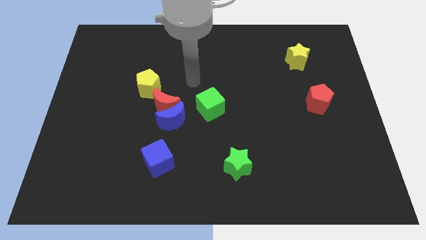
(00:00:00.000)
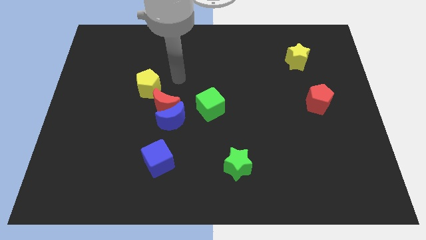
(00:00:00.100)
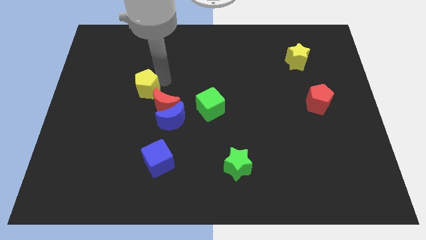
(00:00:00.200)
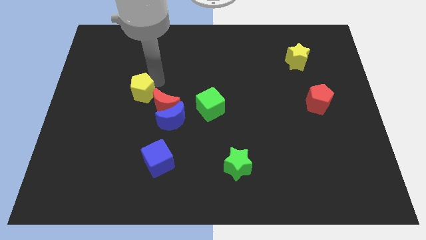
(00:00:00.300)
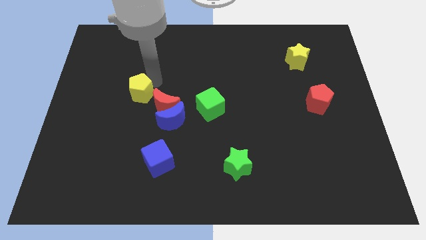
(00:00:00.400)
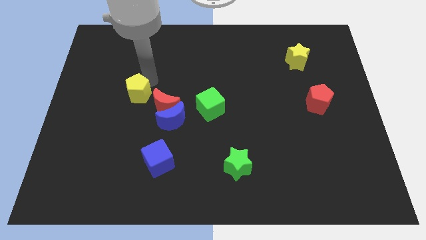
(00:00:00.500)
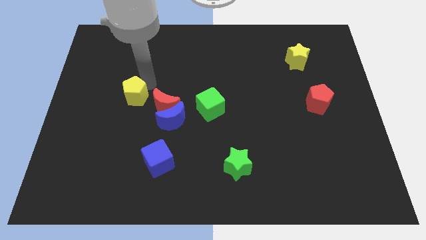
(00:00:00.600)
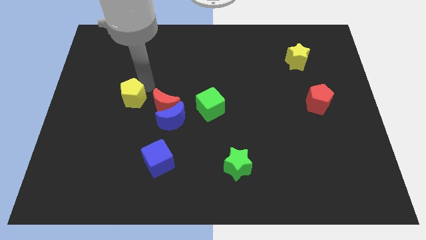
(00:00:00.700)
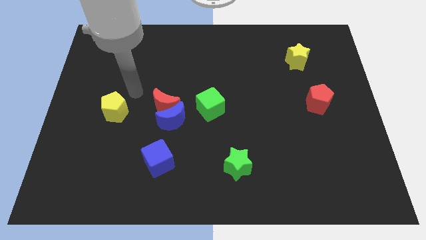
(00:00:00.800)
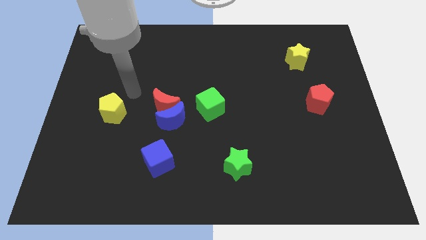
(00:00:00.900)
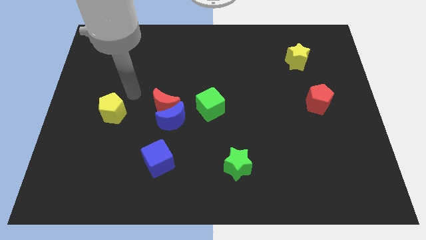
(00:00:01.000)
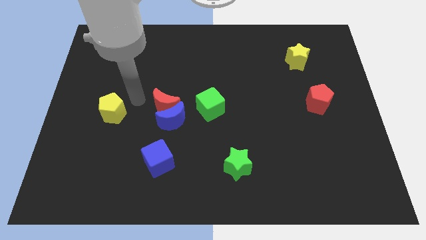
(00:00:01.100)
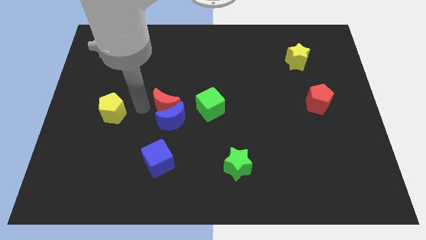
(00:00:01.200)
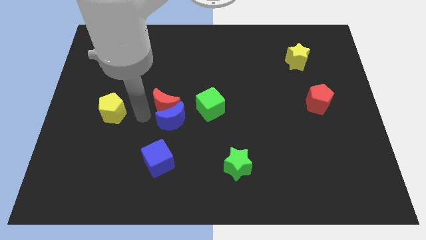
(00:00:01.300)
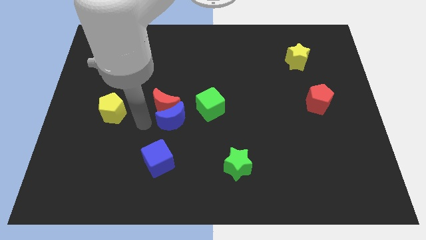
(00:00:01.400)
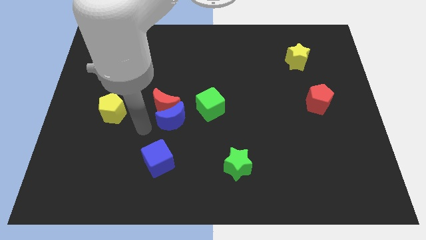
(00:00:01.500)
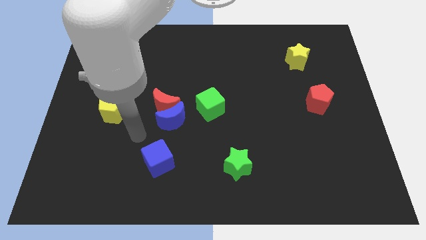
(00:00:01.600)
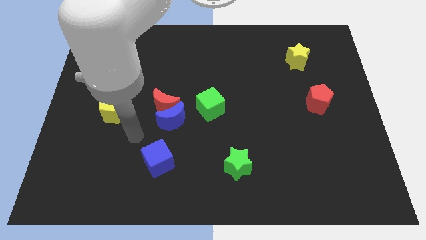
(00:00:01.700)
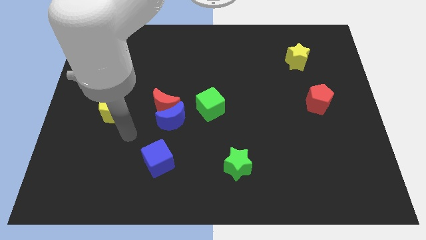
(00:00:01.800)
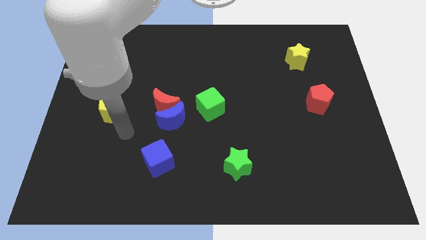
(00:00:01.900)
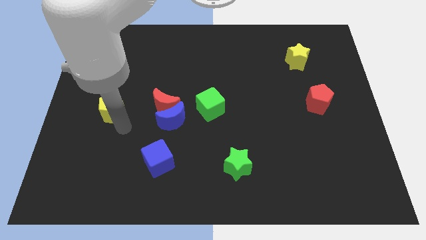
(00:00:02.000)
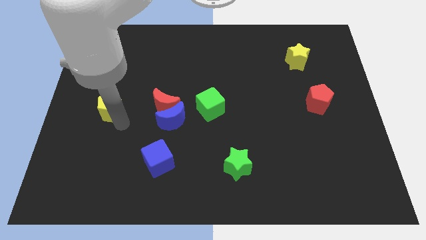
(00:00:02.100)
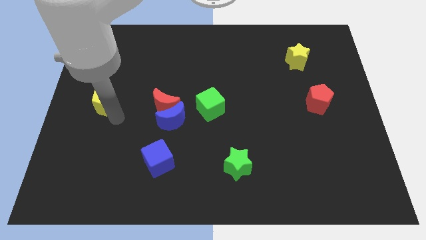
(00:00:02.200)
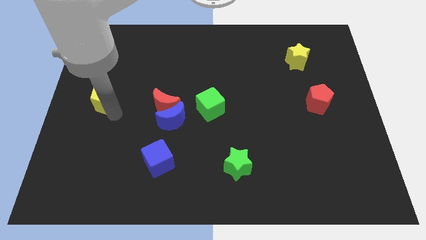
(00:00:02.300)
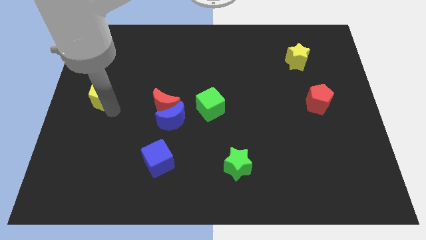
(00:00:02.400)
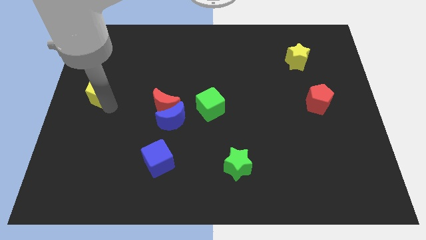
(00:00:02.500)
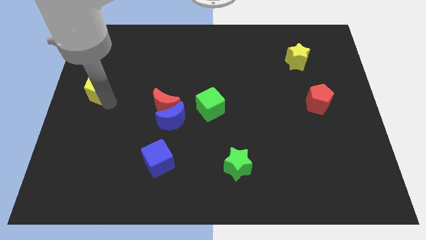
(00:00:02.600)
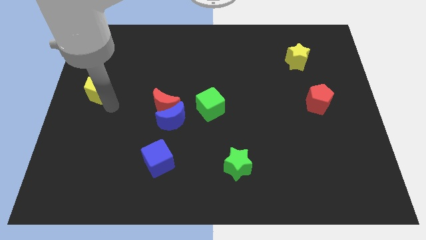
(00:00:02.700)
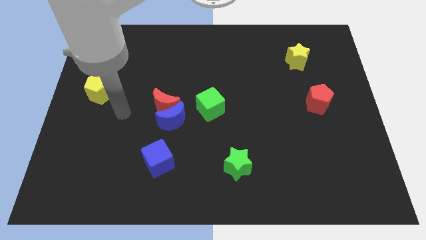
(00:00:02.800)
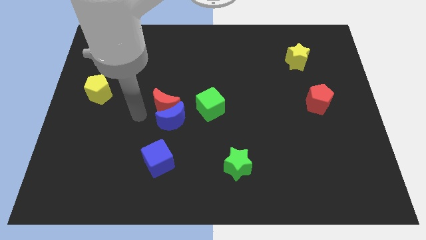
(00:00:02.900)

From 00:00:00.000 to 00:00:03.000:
move the yellow pentagon in a diagonal way

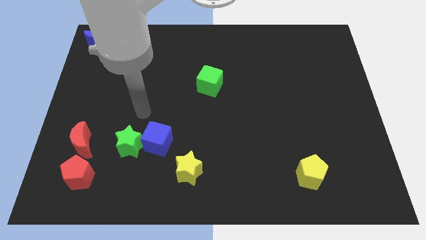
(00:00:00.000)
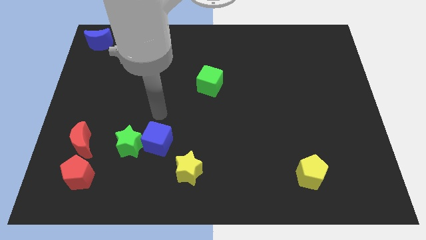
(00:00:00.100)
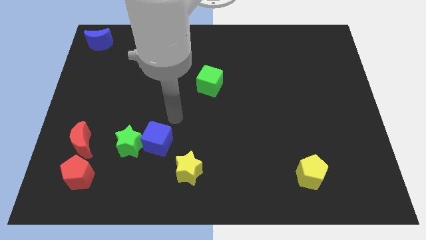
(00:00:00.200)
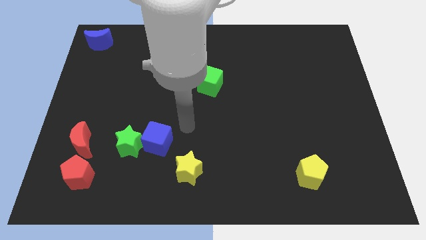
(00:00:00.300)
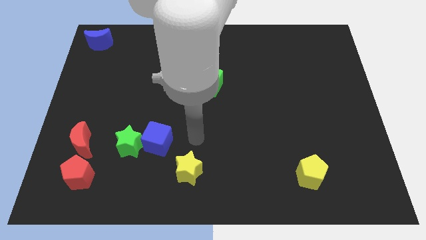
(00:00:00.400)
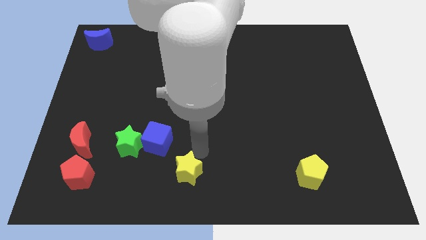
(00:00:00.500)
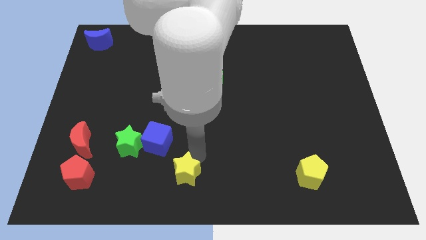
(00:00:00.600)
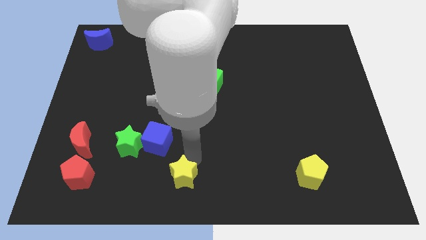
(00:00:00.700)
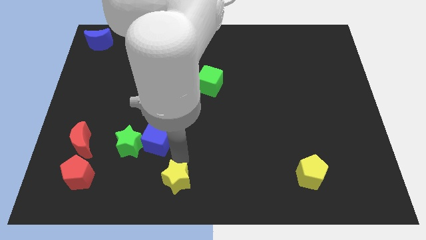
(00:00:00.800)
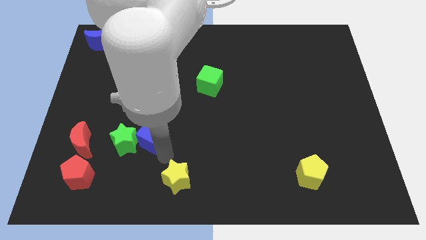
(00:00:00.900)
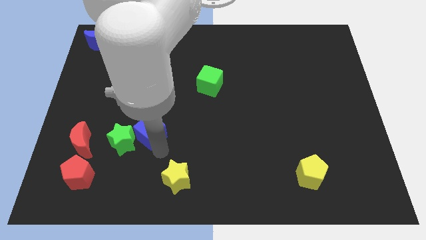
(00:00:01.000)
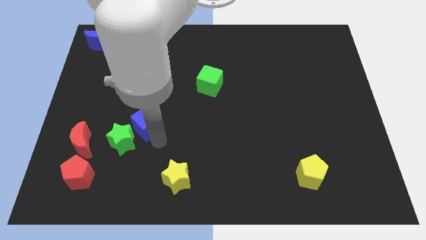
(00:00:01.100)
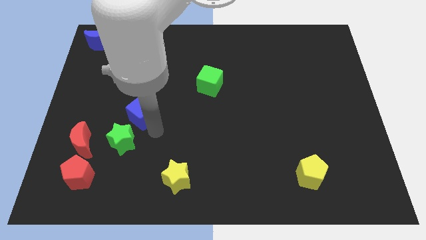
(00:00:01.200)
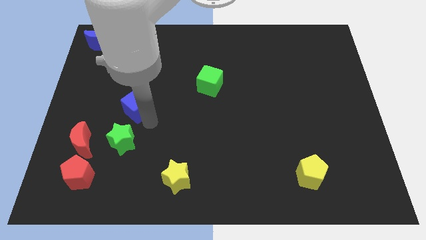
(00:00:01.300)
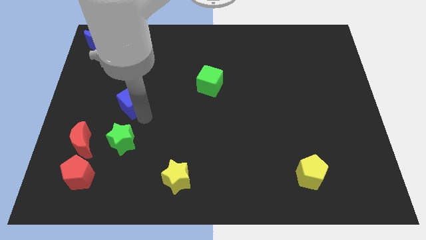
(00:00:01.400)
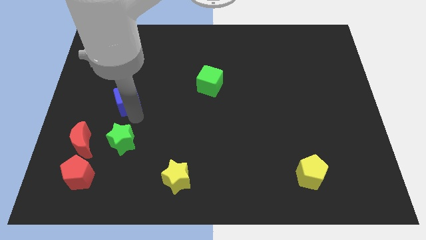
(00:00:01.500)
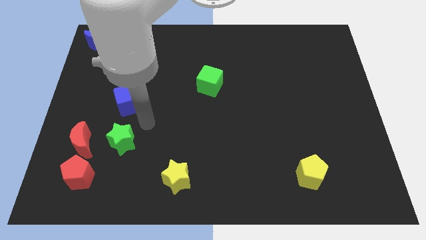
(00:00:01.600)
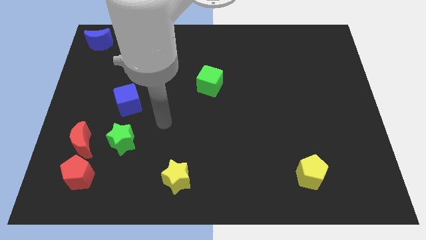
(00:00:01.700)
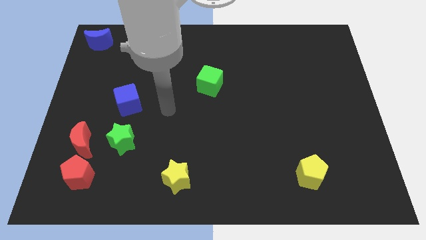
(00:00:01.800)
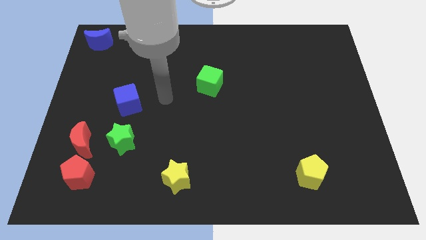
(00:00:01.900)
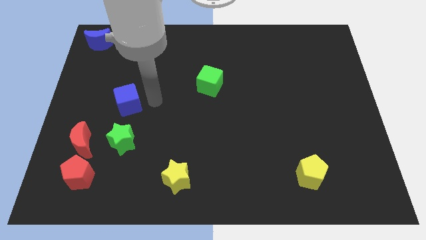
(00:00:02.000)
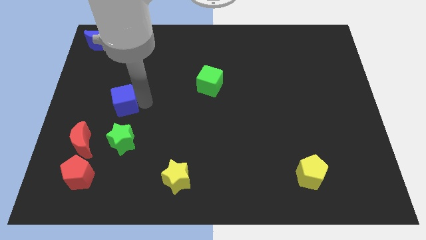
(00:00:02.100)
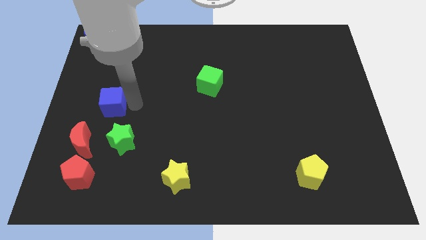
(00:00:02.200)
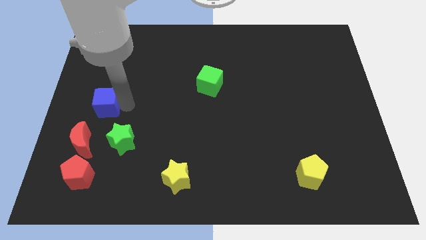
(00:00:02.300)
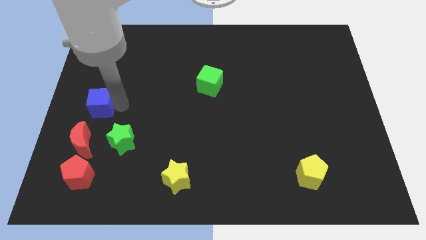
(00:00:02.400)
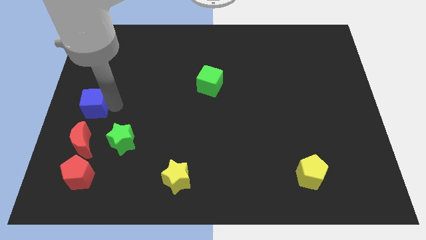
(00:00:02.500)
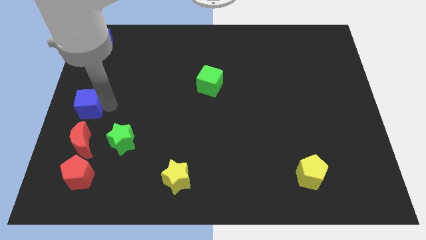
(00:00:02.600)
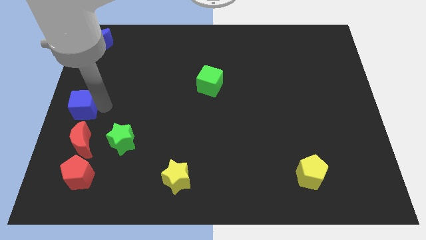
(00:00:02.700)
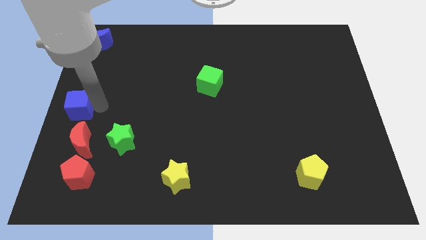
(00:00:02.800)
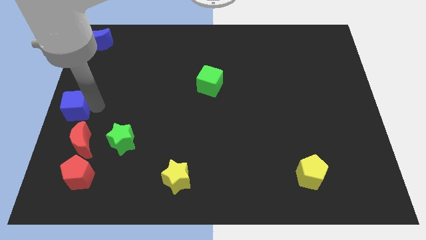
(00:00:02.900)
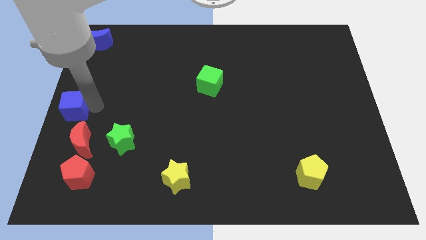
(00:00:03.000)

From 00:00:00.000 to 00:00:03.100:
move blue cube towards the center left

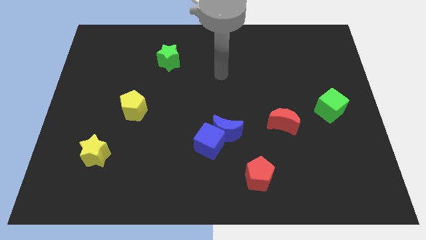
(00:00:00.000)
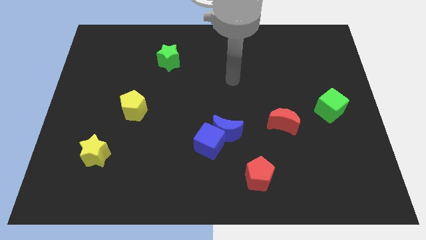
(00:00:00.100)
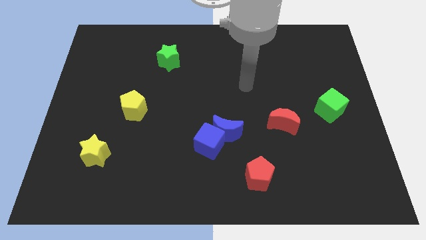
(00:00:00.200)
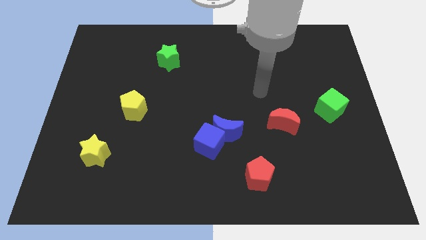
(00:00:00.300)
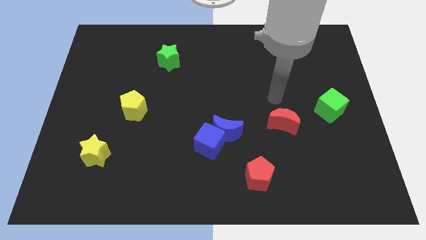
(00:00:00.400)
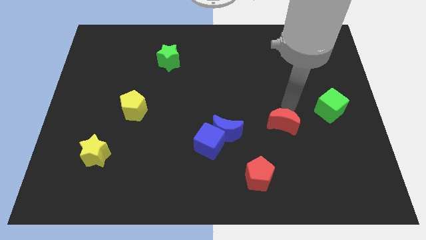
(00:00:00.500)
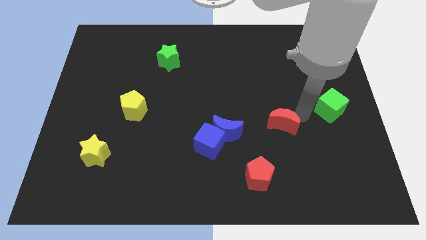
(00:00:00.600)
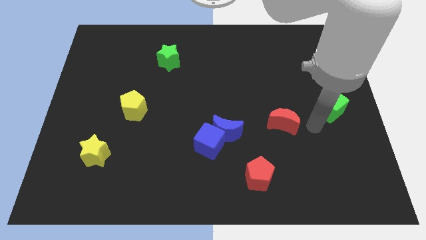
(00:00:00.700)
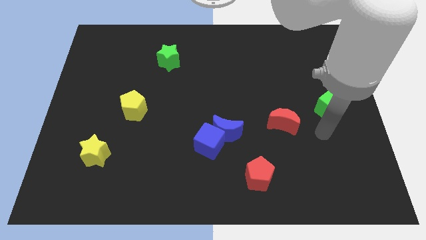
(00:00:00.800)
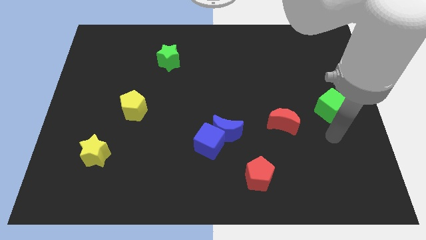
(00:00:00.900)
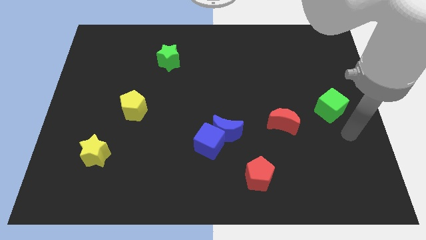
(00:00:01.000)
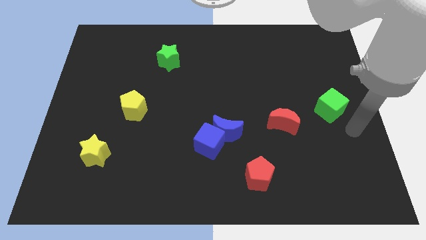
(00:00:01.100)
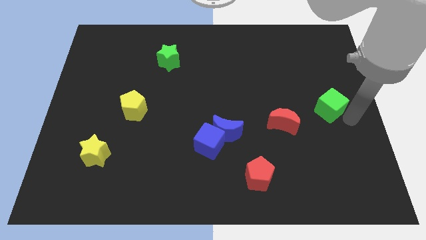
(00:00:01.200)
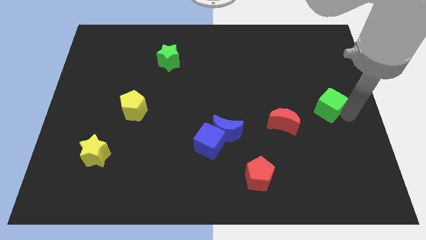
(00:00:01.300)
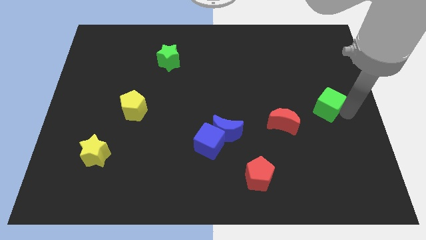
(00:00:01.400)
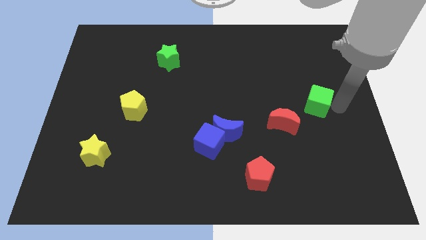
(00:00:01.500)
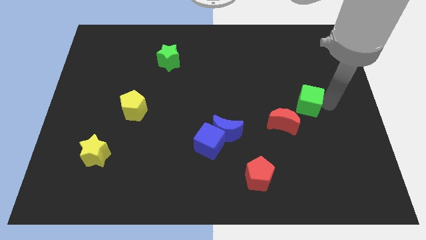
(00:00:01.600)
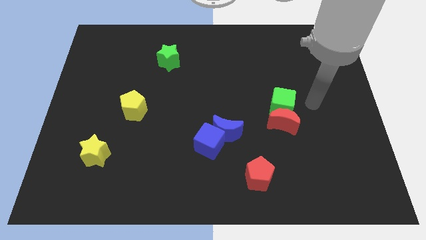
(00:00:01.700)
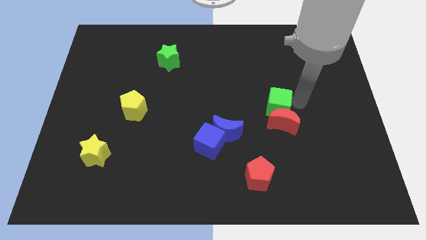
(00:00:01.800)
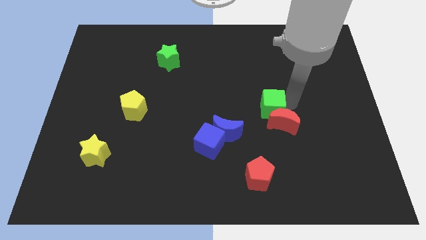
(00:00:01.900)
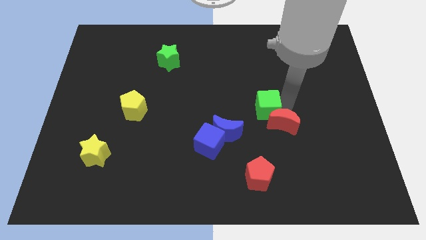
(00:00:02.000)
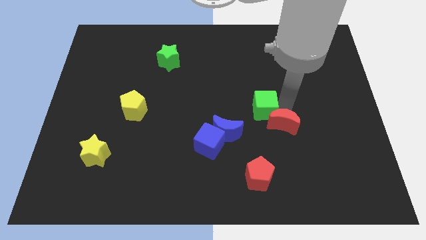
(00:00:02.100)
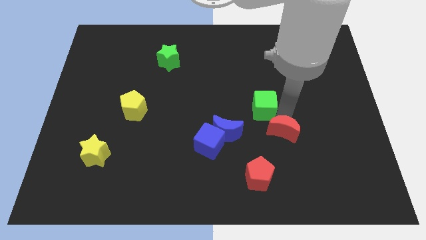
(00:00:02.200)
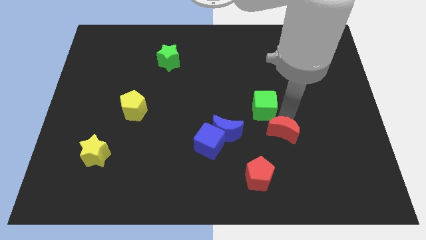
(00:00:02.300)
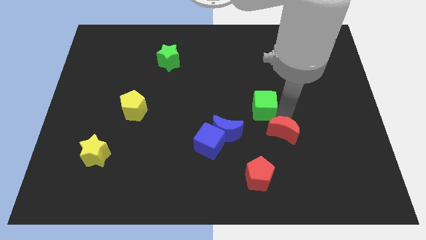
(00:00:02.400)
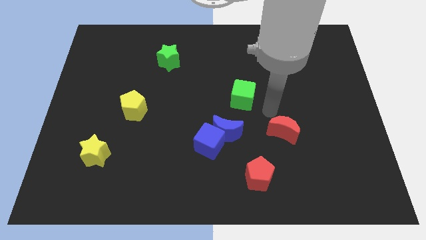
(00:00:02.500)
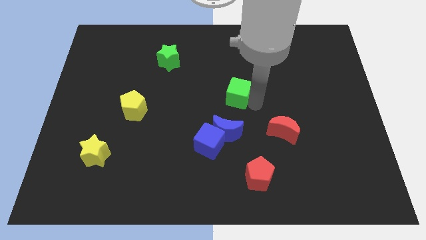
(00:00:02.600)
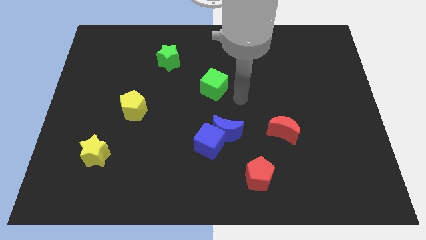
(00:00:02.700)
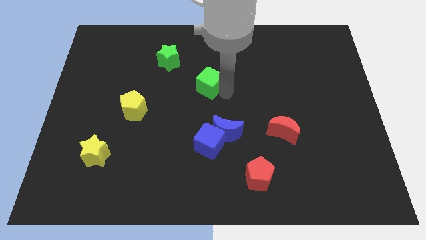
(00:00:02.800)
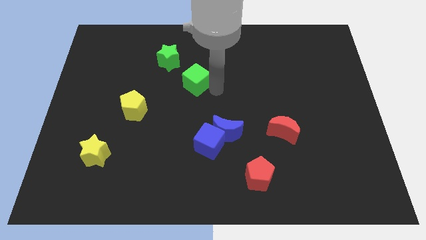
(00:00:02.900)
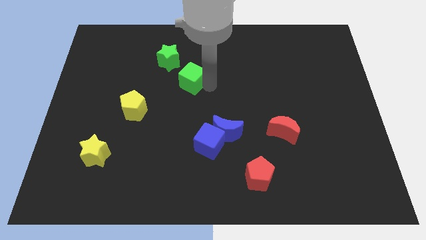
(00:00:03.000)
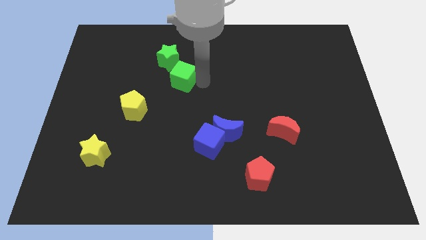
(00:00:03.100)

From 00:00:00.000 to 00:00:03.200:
place the green cube towards the bottom right side of the green star
